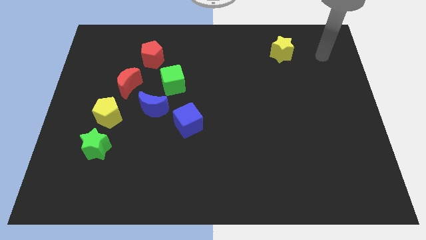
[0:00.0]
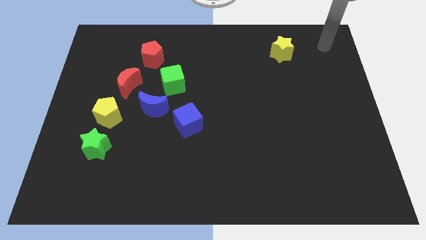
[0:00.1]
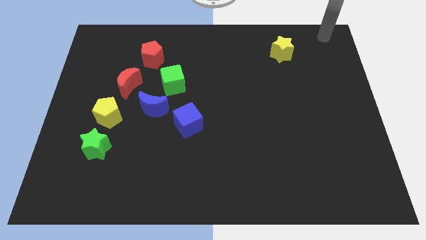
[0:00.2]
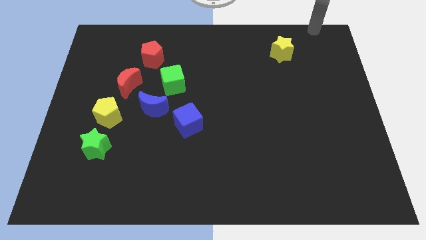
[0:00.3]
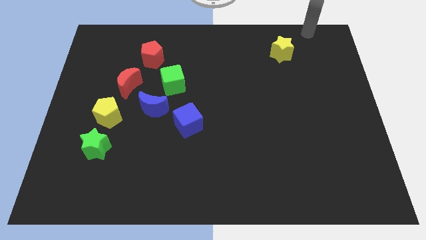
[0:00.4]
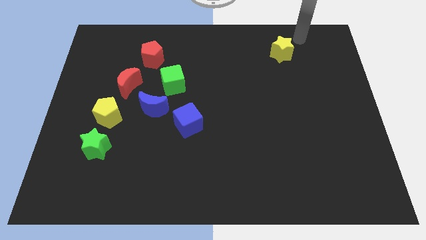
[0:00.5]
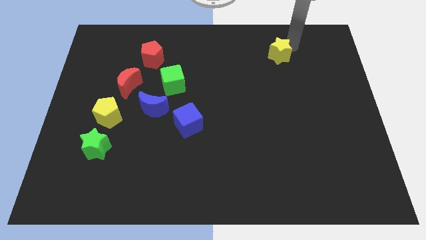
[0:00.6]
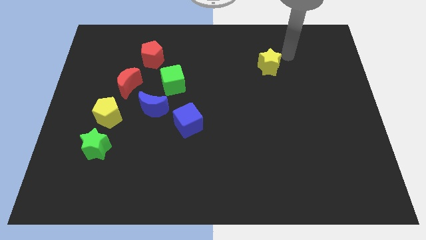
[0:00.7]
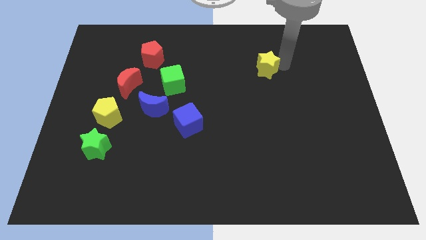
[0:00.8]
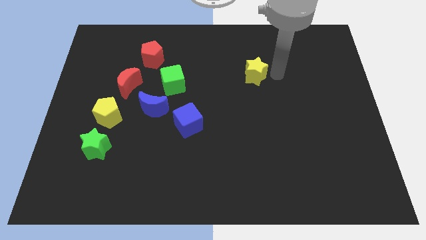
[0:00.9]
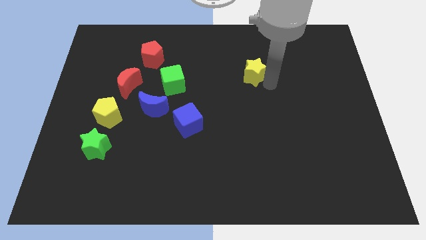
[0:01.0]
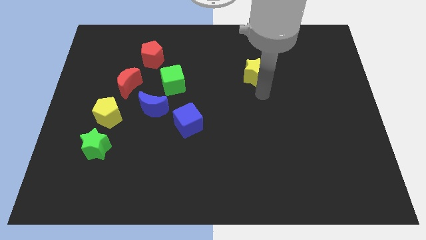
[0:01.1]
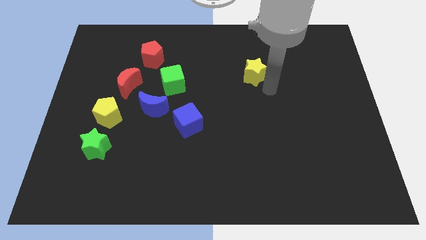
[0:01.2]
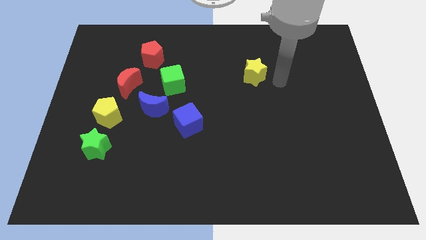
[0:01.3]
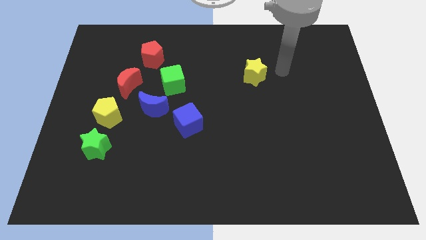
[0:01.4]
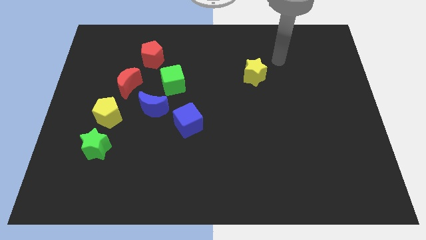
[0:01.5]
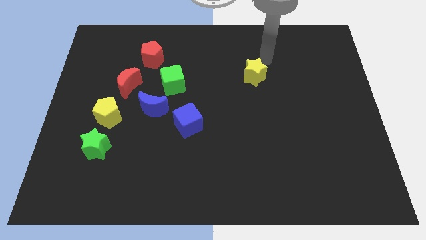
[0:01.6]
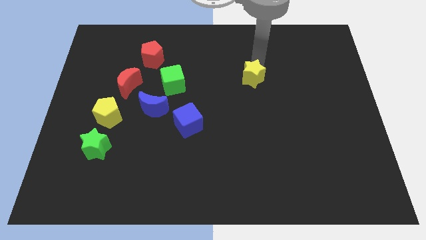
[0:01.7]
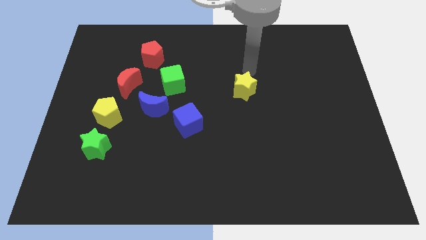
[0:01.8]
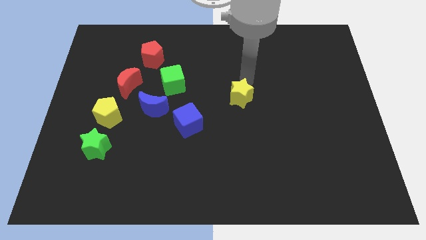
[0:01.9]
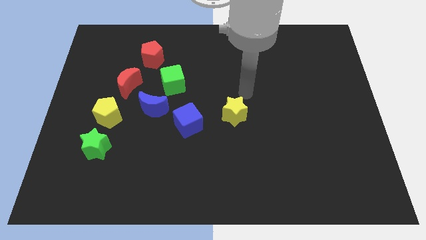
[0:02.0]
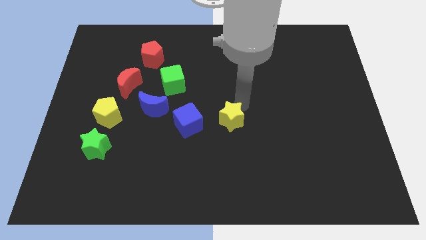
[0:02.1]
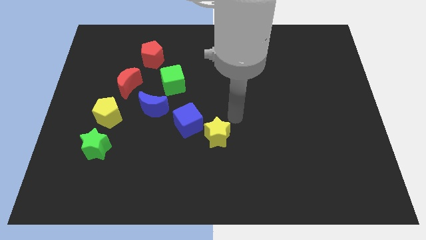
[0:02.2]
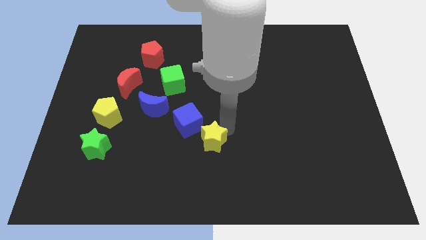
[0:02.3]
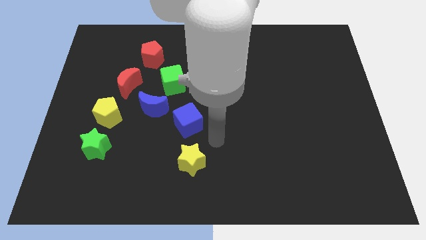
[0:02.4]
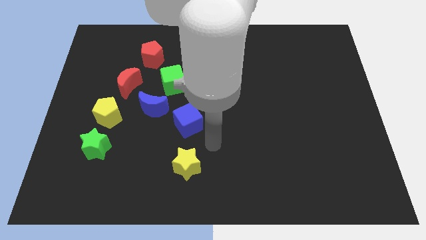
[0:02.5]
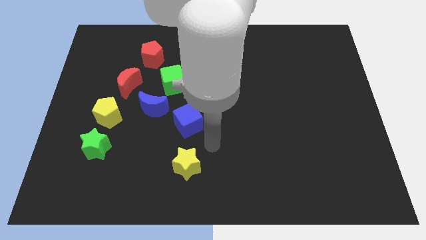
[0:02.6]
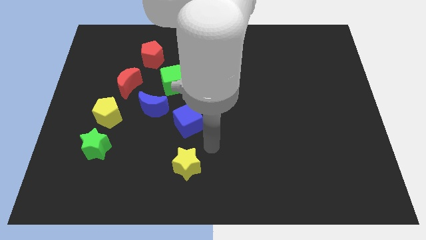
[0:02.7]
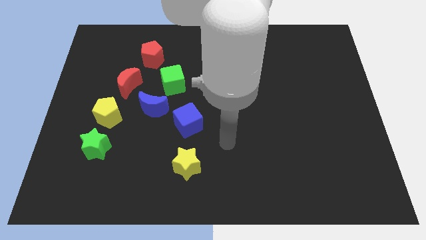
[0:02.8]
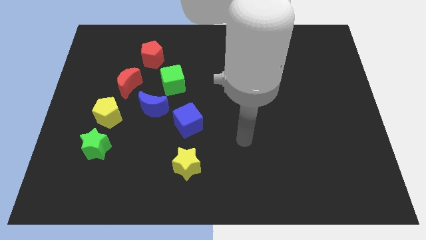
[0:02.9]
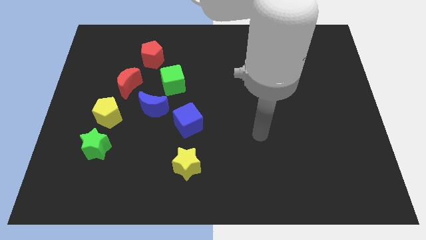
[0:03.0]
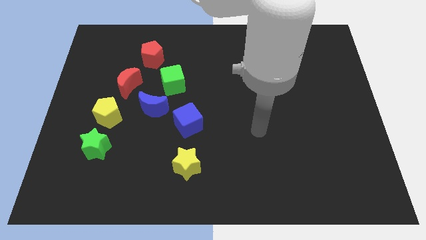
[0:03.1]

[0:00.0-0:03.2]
place the yellow star below the blue cube

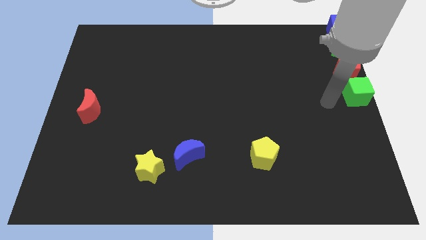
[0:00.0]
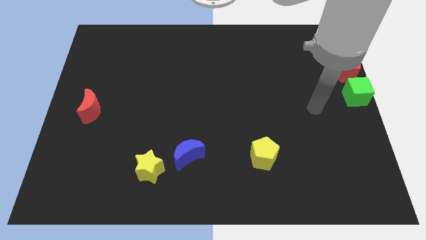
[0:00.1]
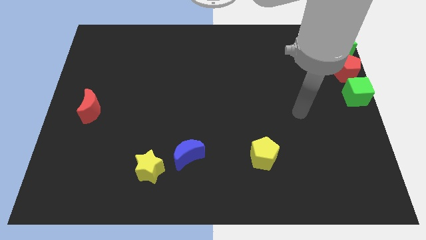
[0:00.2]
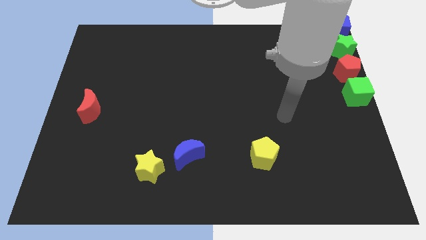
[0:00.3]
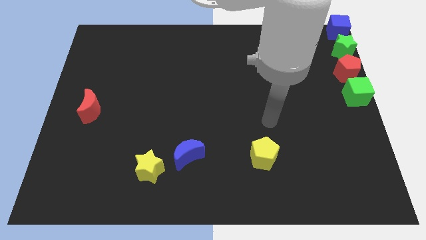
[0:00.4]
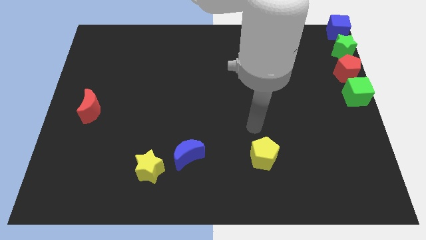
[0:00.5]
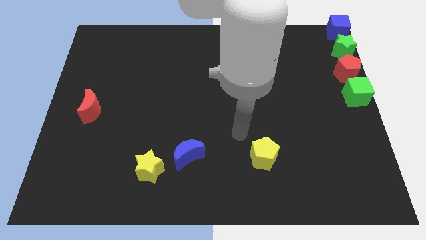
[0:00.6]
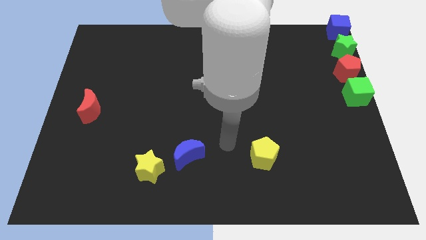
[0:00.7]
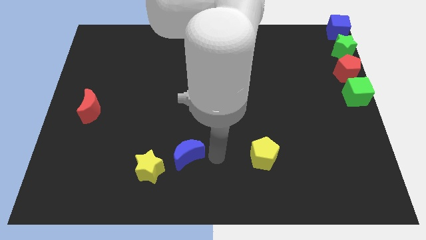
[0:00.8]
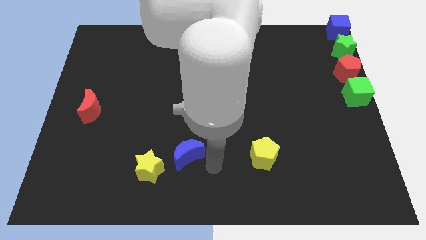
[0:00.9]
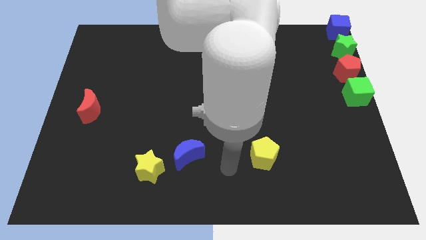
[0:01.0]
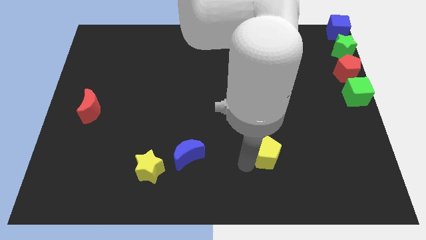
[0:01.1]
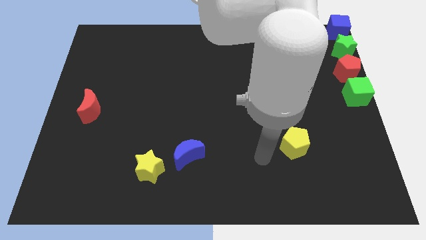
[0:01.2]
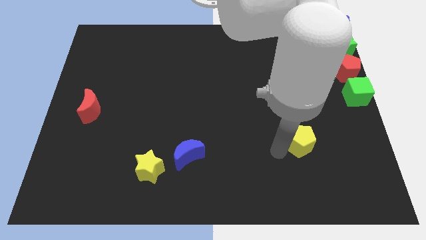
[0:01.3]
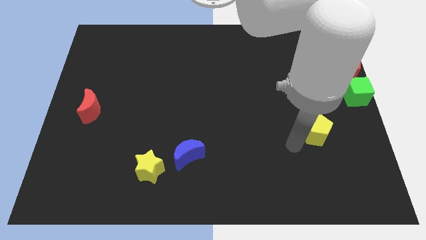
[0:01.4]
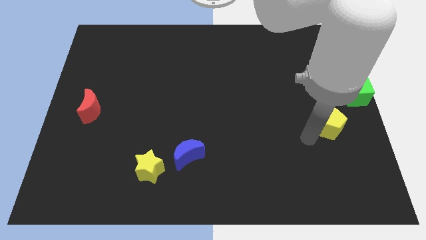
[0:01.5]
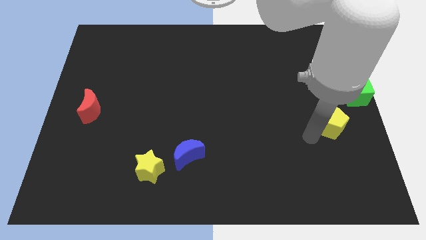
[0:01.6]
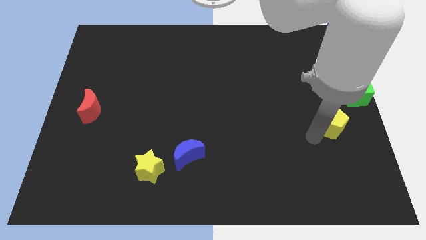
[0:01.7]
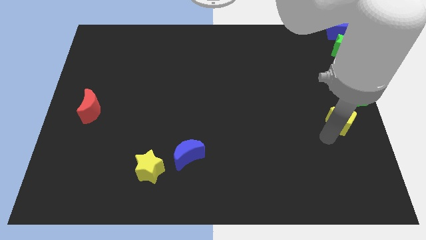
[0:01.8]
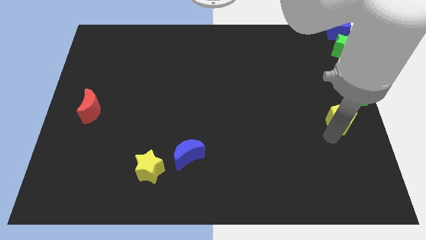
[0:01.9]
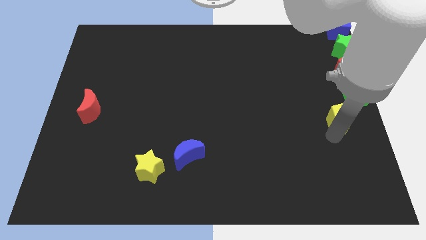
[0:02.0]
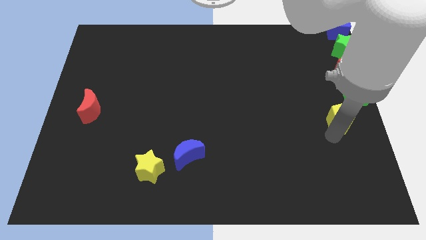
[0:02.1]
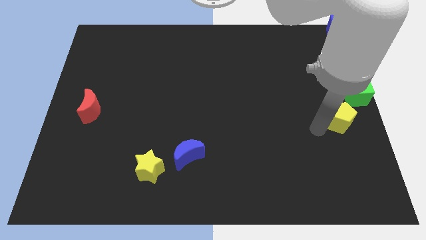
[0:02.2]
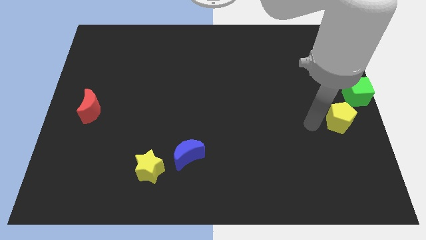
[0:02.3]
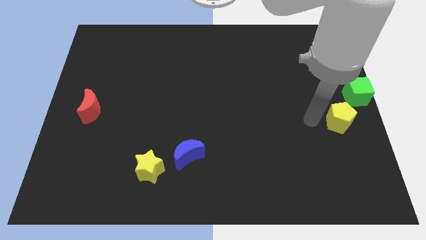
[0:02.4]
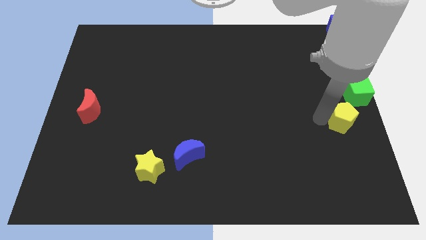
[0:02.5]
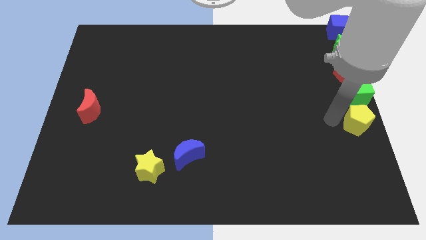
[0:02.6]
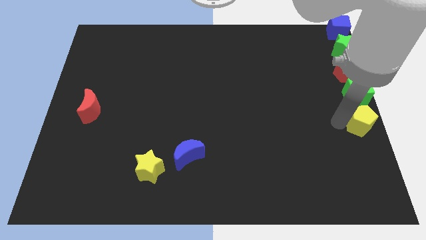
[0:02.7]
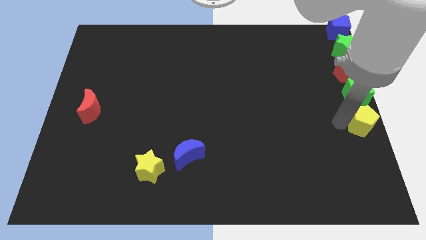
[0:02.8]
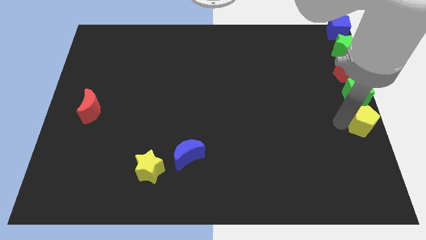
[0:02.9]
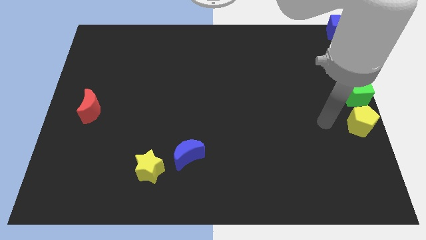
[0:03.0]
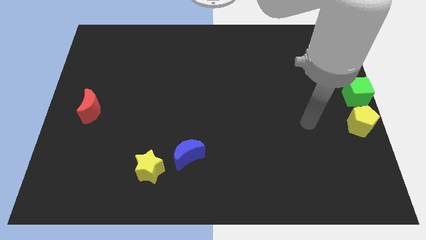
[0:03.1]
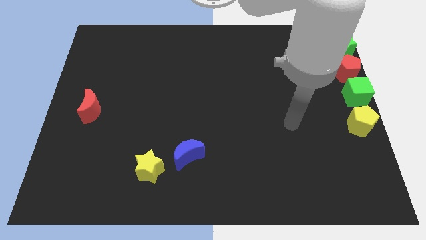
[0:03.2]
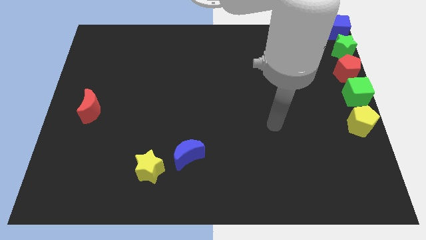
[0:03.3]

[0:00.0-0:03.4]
push the yellow pentagon below the green cube to form a line

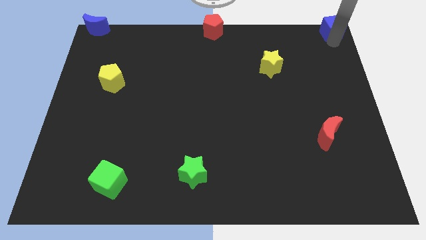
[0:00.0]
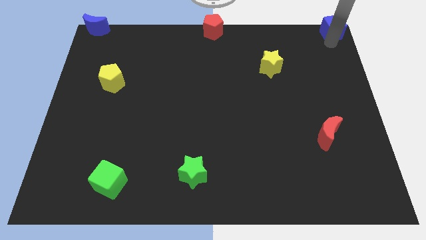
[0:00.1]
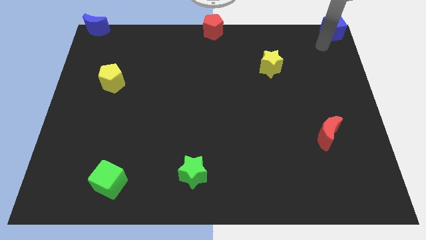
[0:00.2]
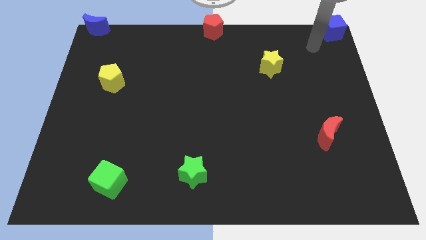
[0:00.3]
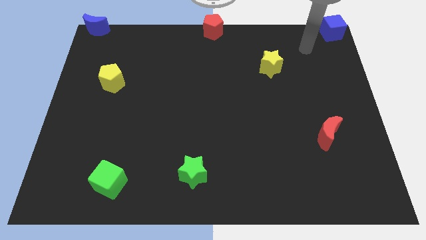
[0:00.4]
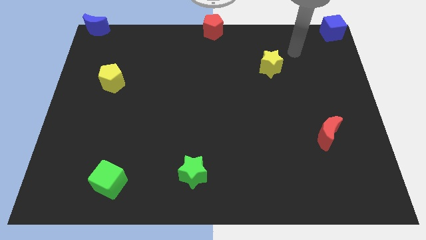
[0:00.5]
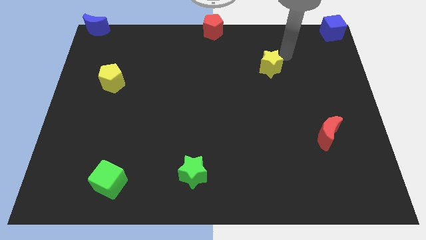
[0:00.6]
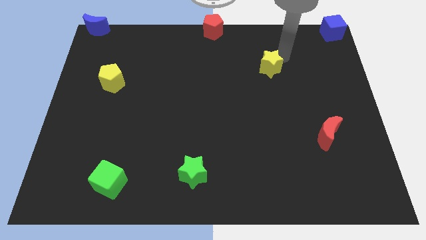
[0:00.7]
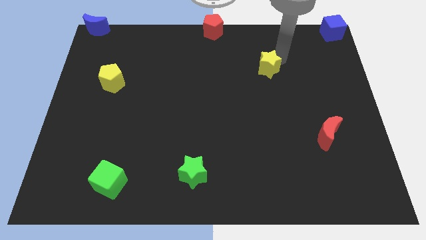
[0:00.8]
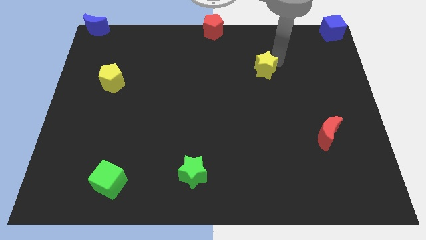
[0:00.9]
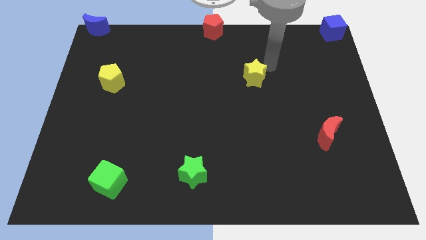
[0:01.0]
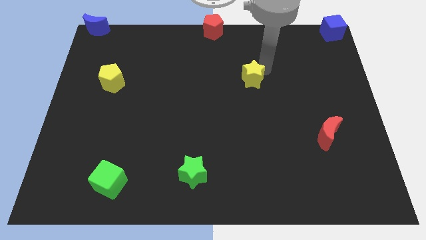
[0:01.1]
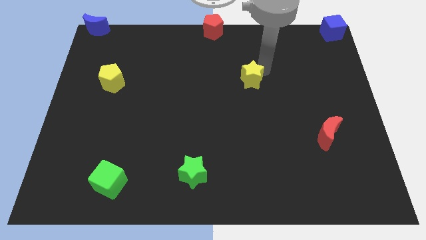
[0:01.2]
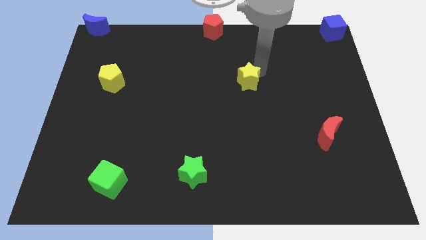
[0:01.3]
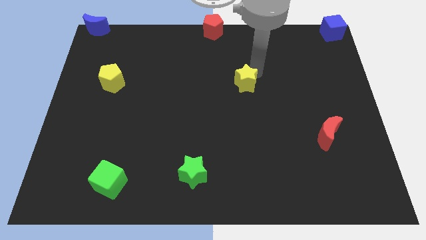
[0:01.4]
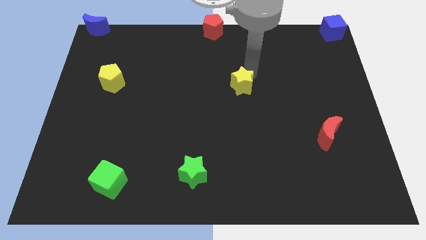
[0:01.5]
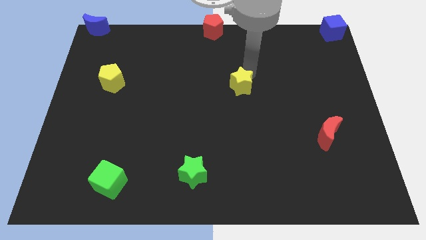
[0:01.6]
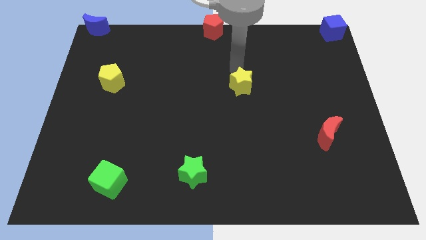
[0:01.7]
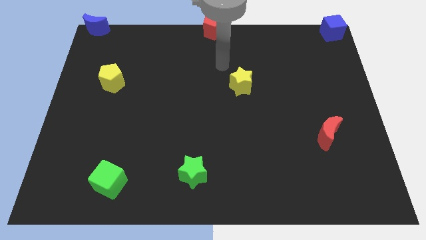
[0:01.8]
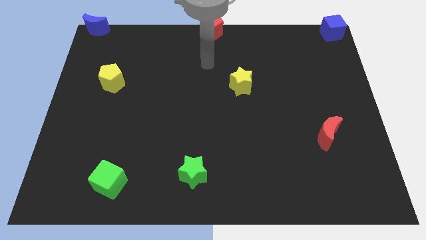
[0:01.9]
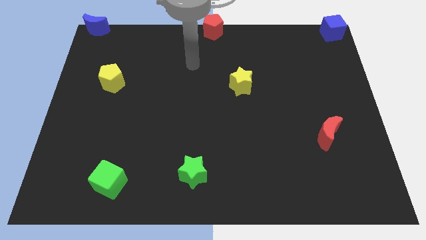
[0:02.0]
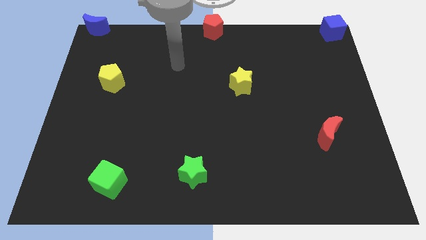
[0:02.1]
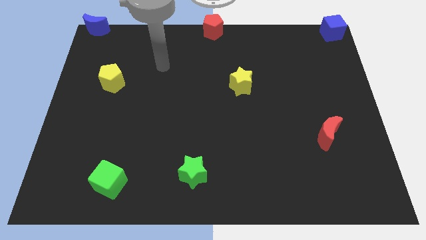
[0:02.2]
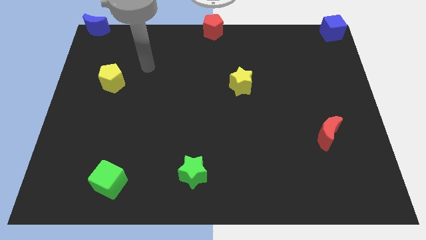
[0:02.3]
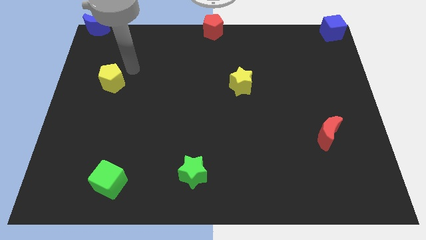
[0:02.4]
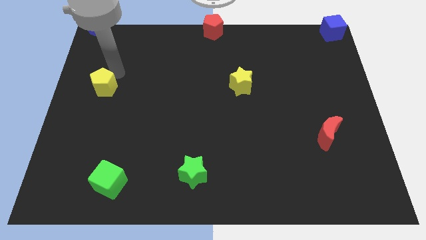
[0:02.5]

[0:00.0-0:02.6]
place yellow star to the bottom right of the red pentagon
